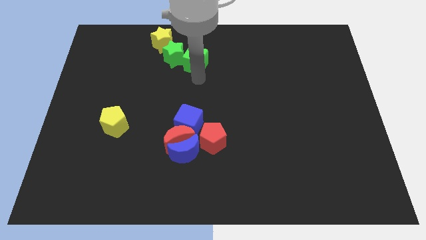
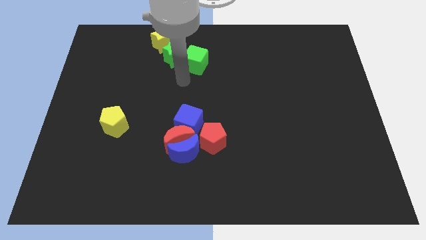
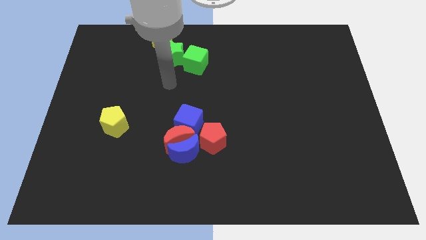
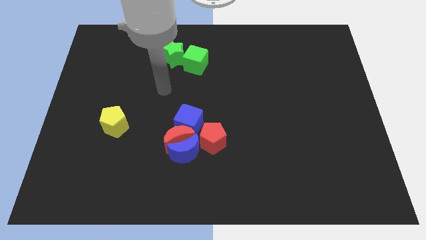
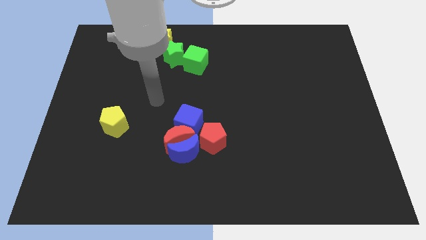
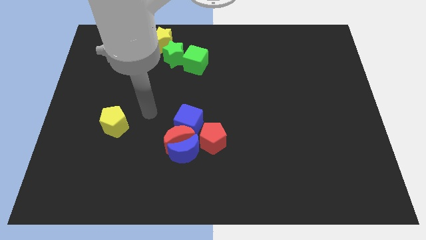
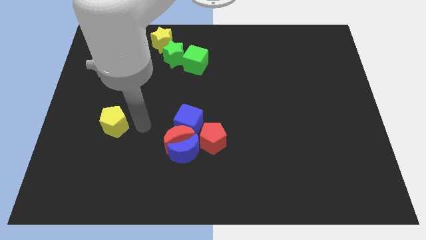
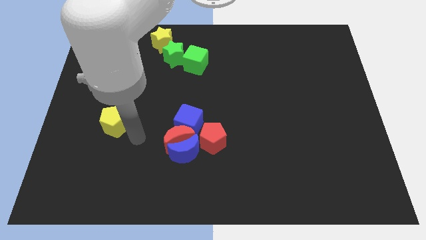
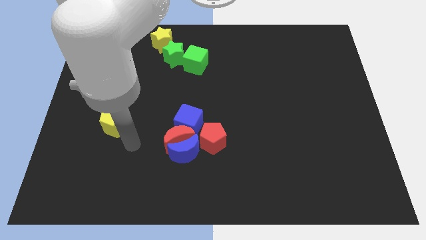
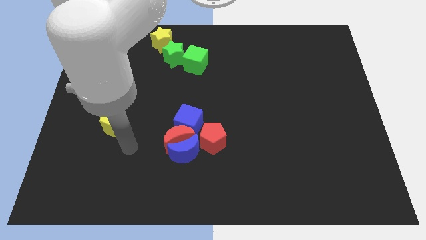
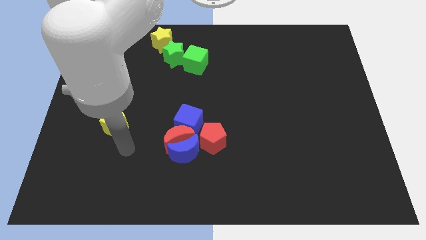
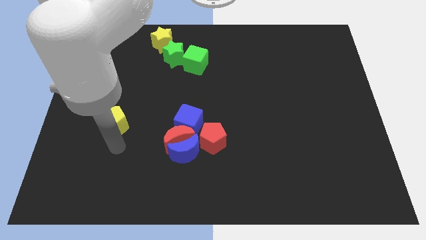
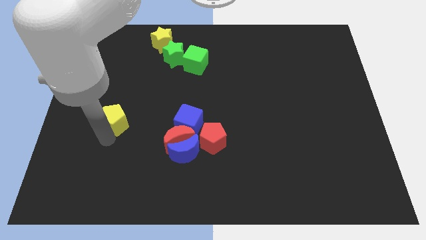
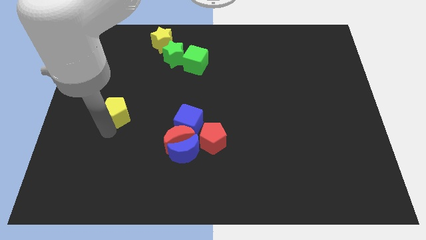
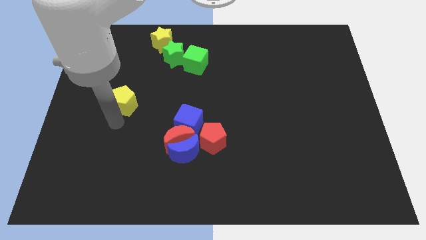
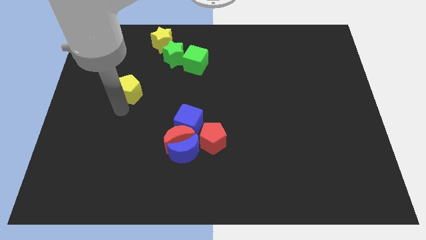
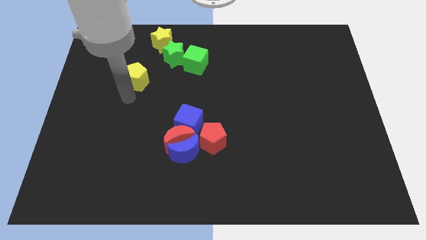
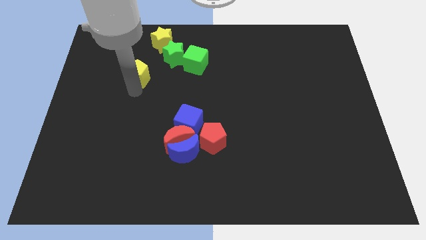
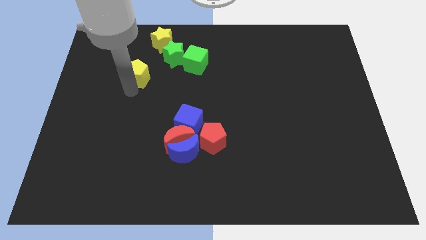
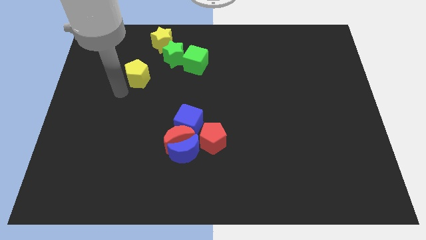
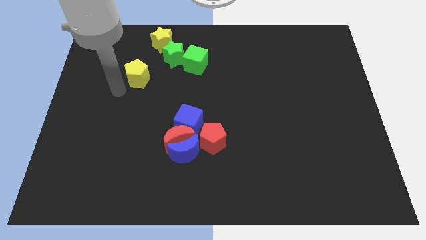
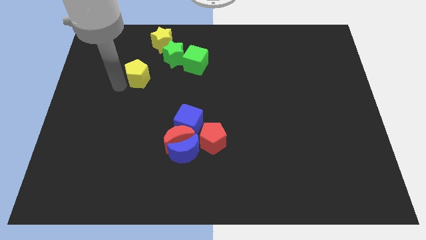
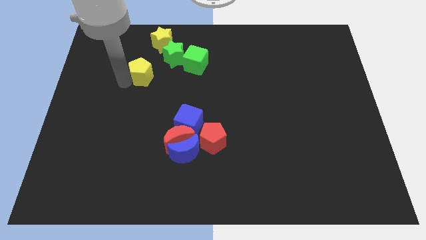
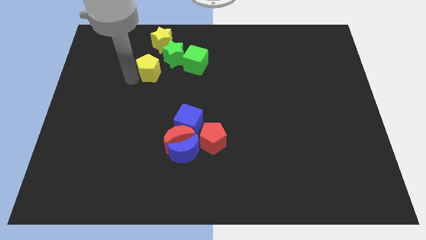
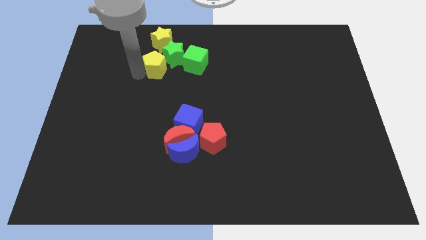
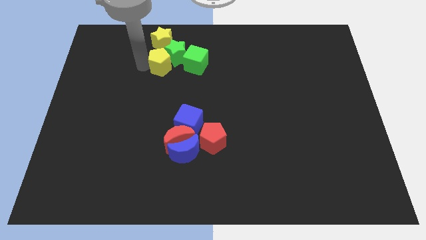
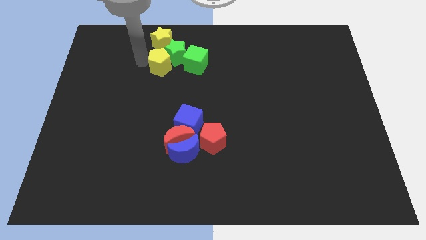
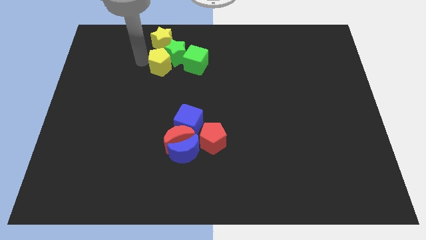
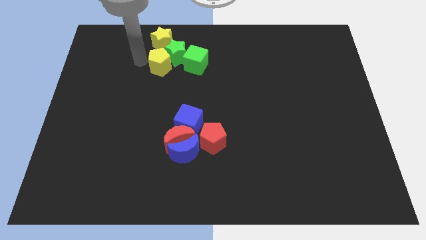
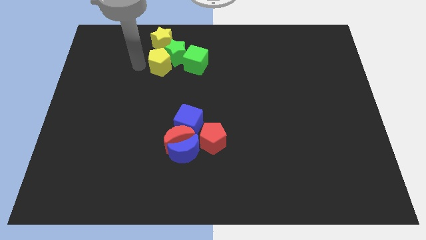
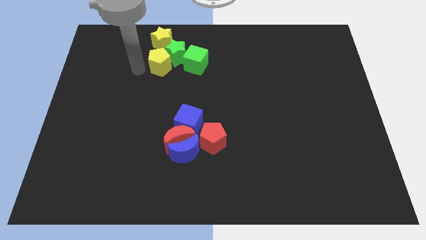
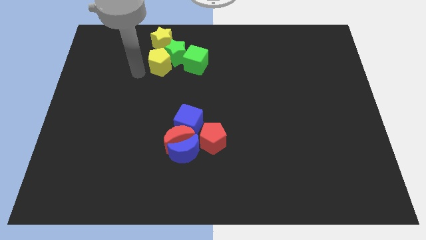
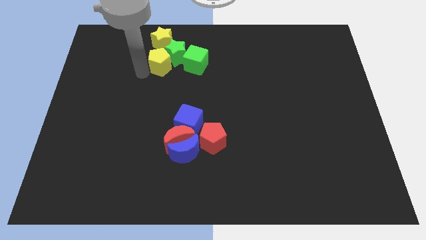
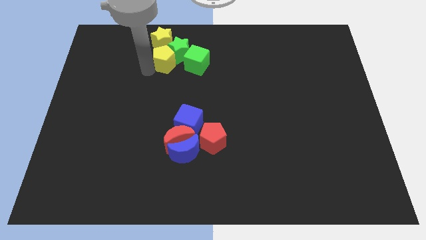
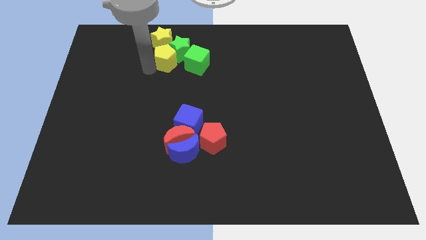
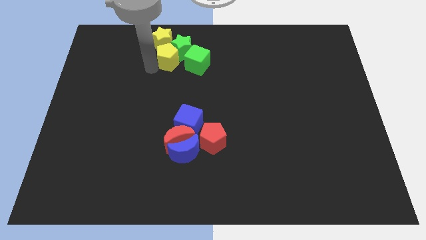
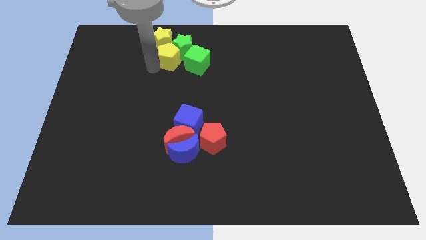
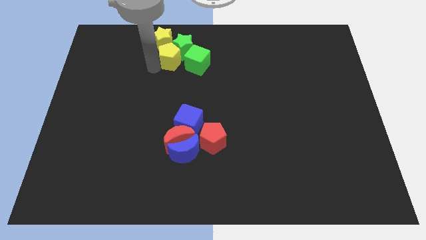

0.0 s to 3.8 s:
push the yellow pentagon into the green star

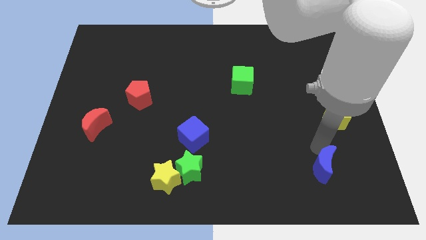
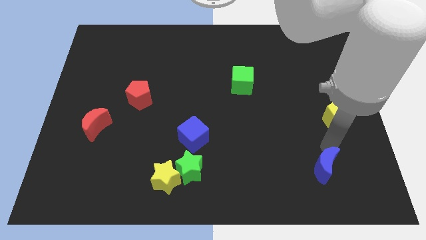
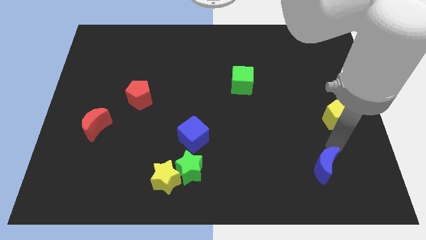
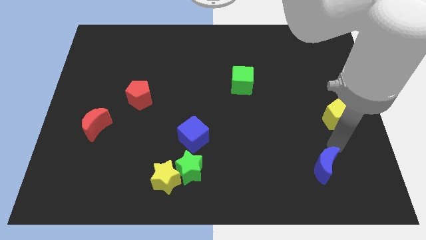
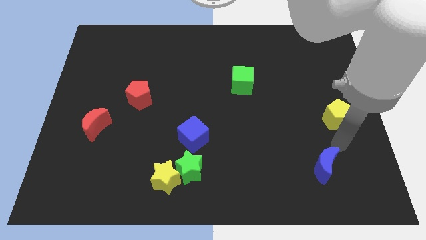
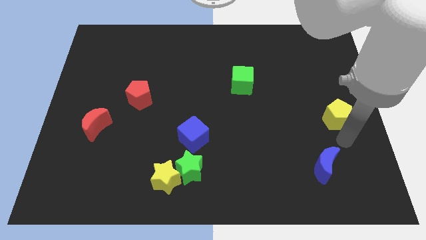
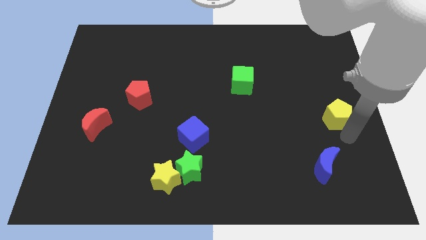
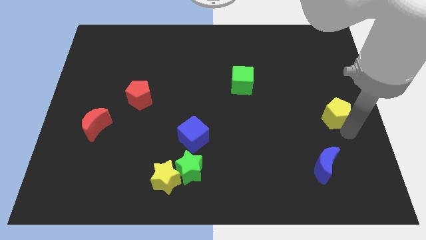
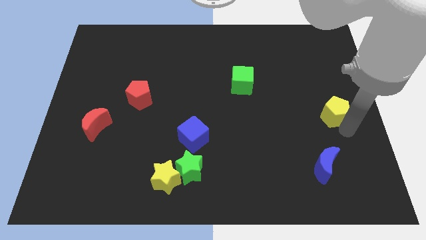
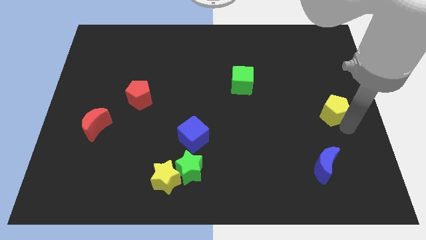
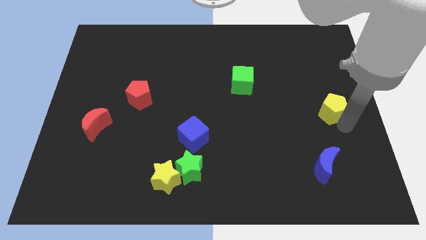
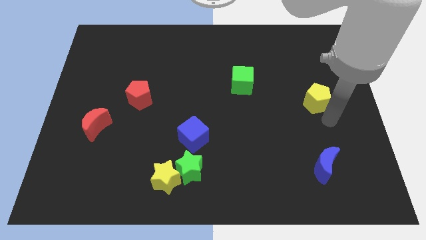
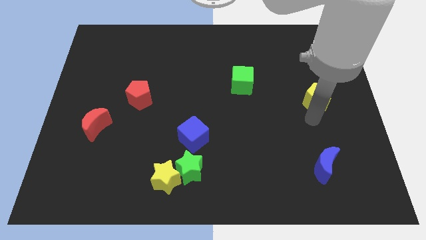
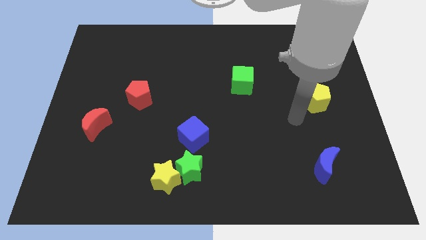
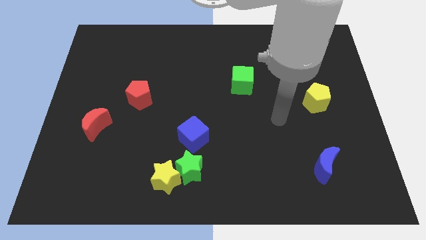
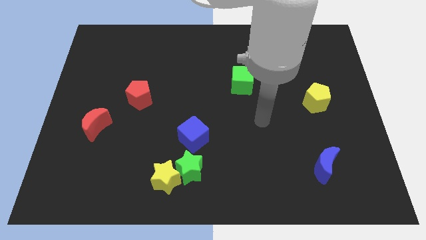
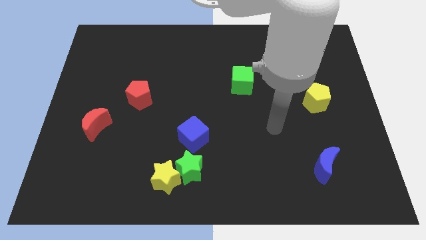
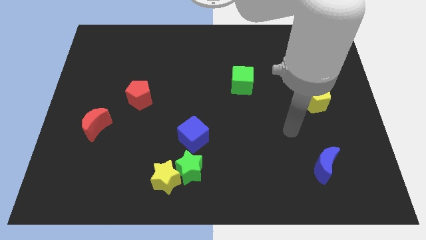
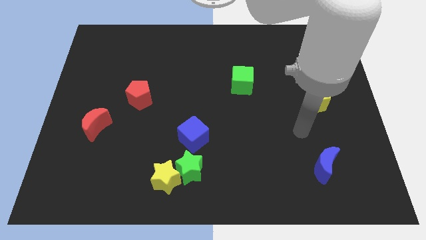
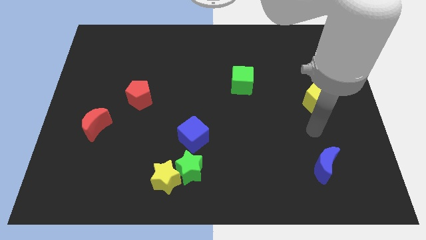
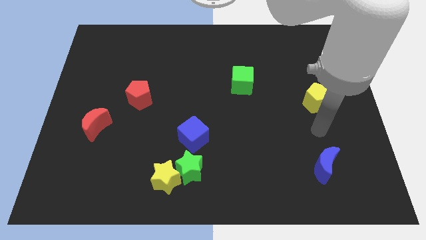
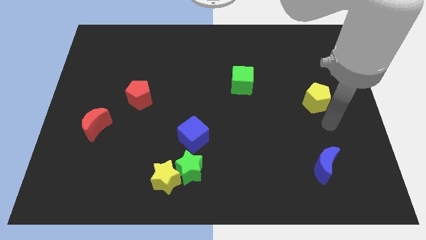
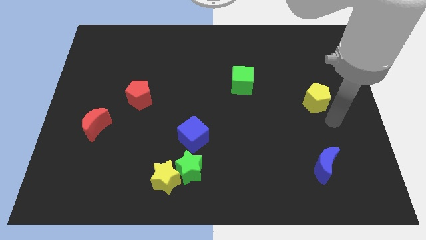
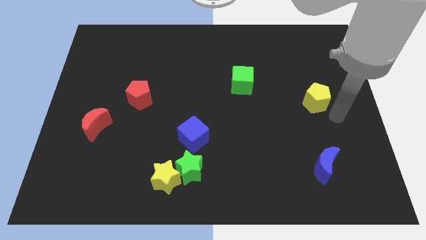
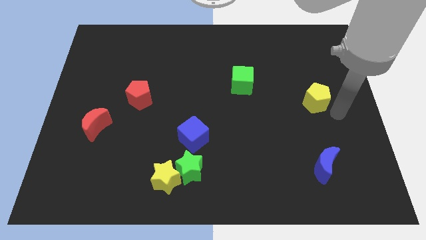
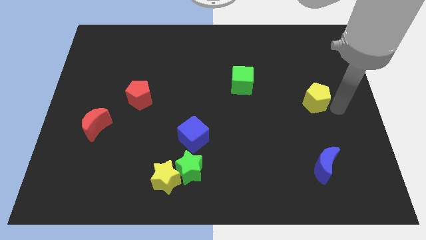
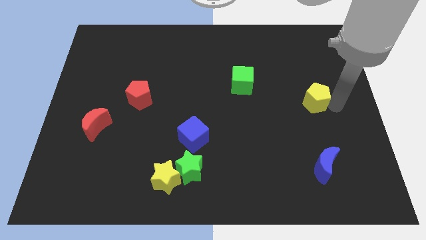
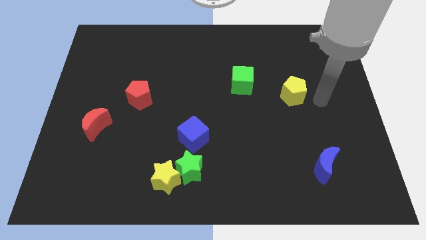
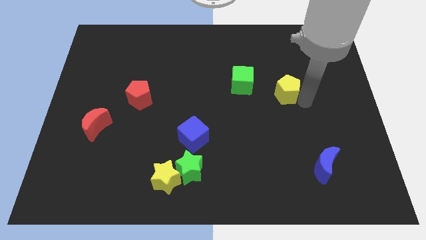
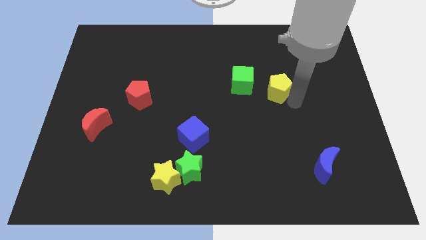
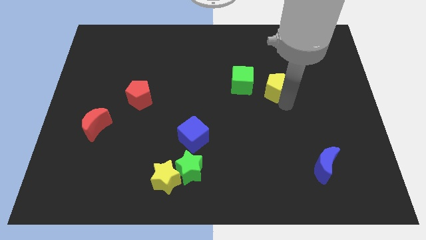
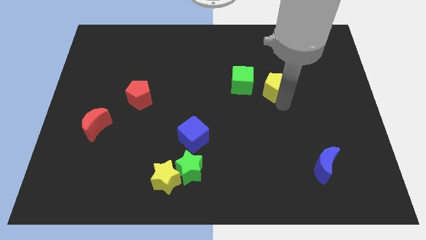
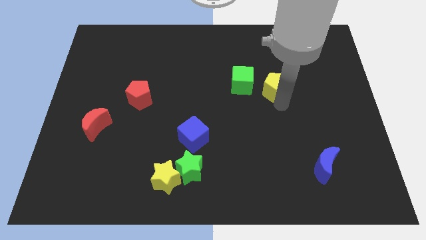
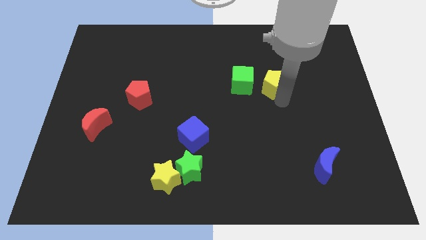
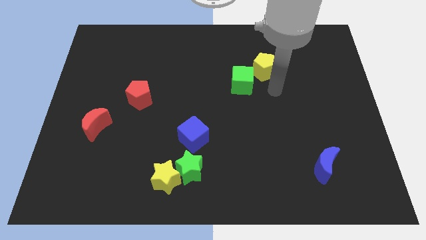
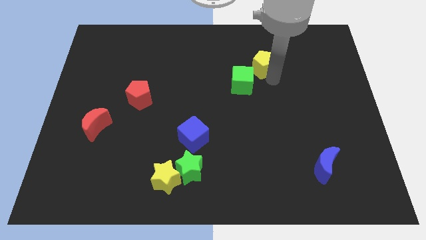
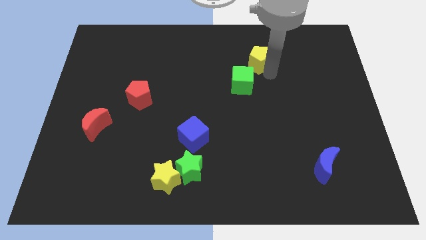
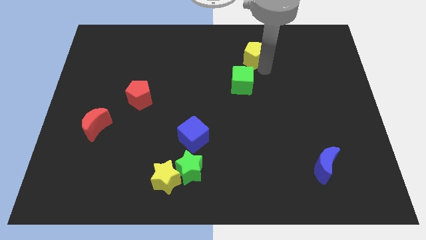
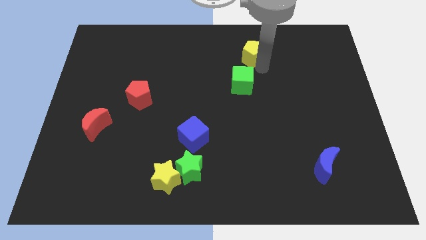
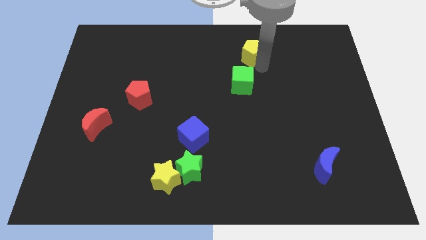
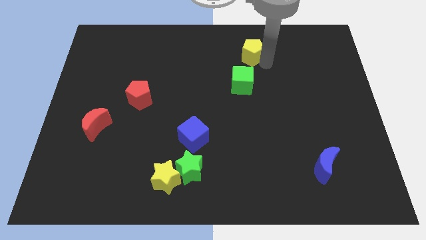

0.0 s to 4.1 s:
move yellow pentagon above green star

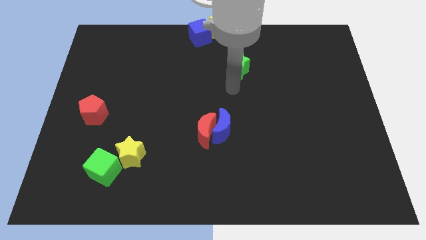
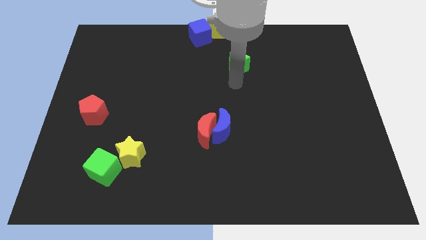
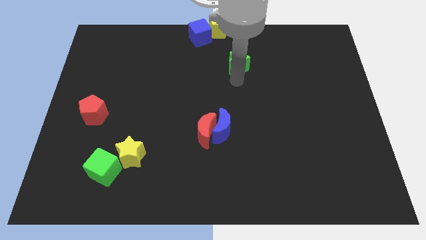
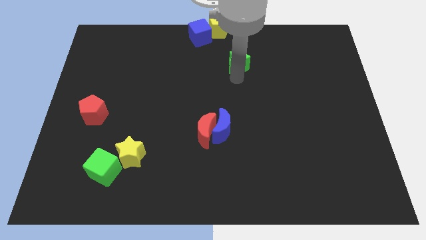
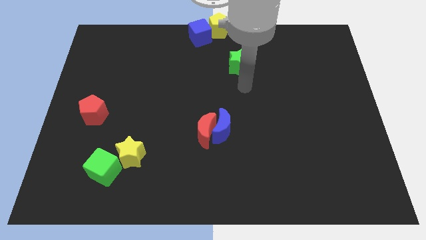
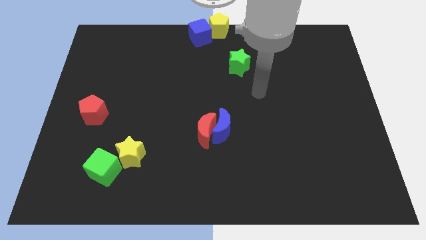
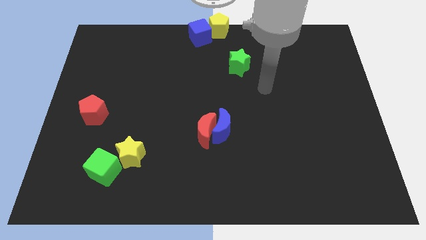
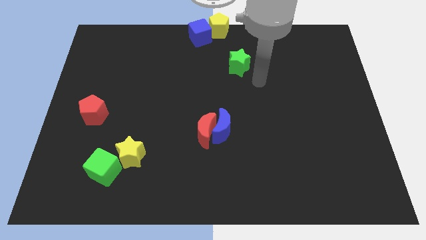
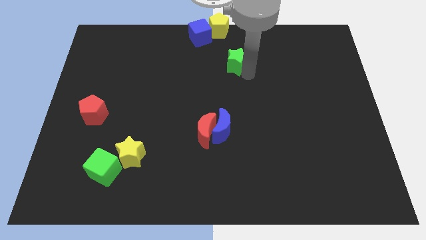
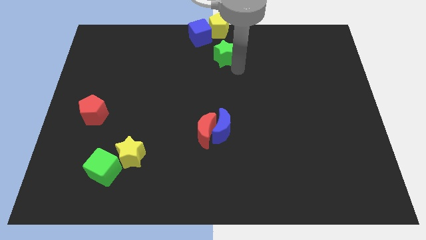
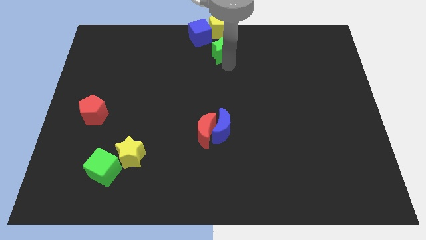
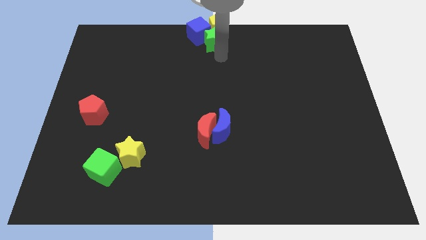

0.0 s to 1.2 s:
place green star to the bottom of yellow pentagon
